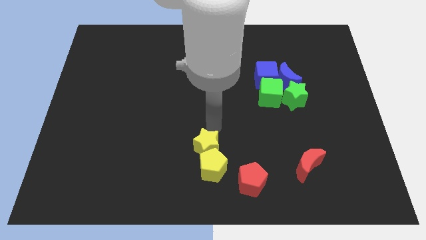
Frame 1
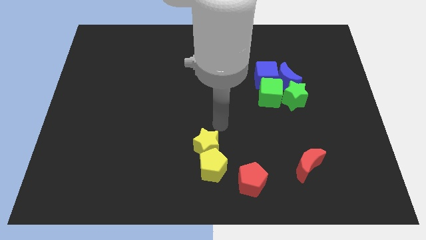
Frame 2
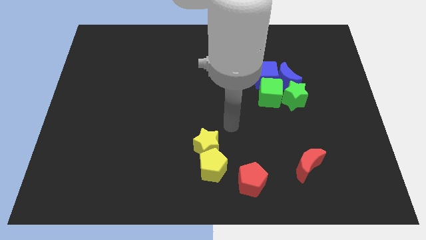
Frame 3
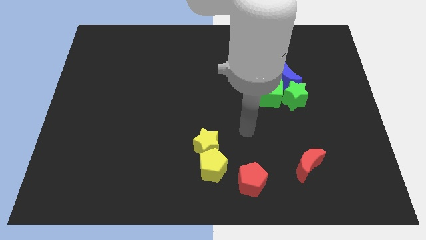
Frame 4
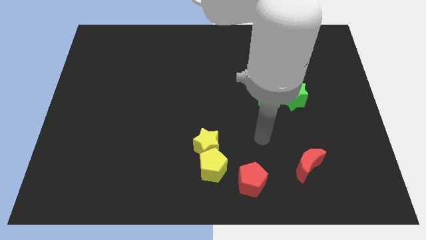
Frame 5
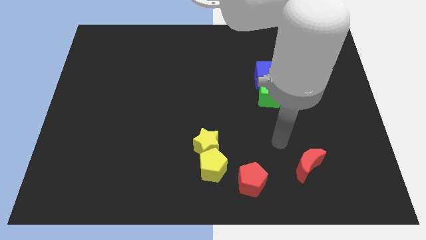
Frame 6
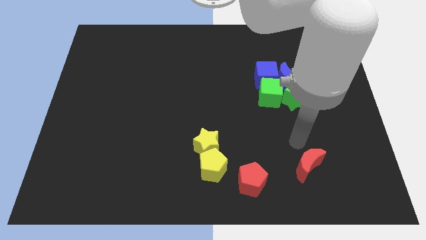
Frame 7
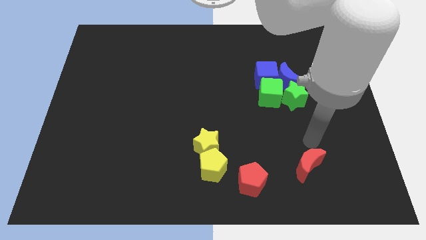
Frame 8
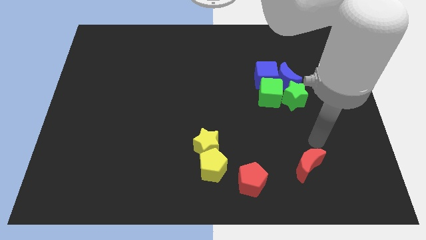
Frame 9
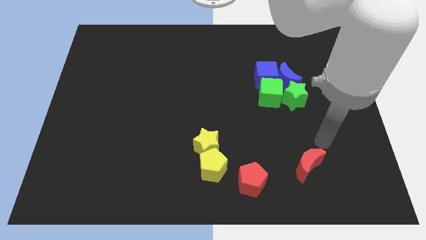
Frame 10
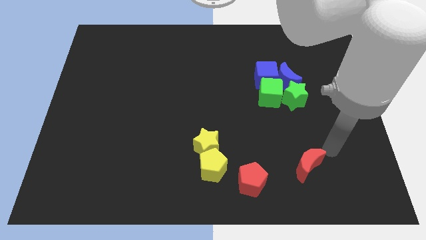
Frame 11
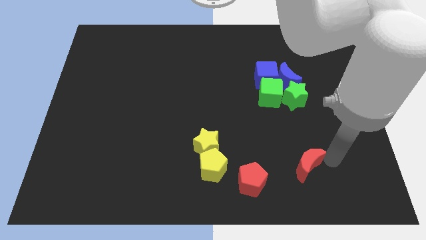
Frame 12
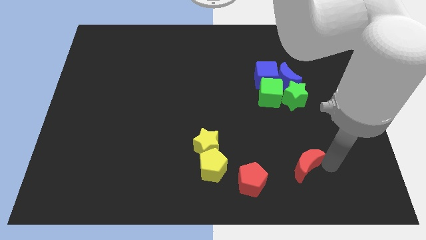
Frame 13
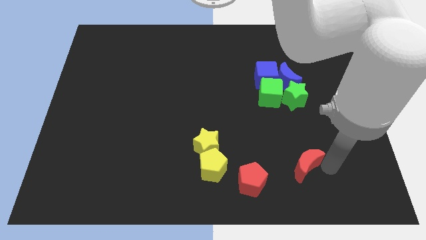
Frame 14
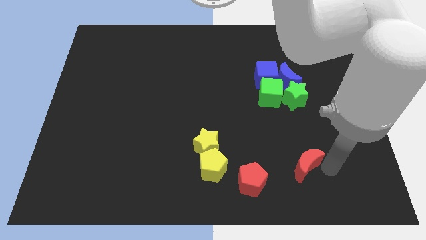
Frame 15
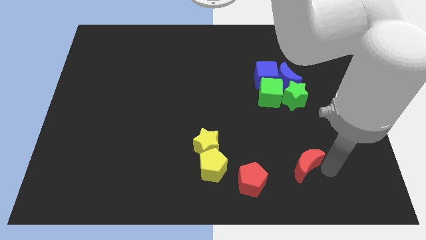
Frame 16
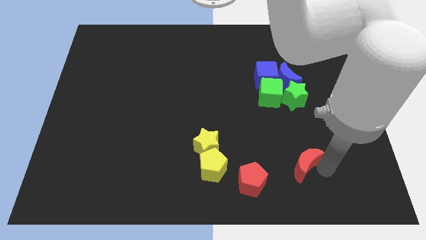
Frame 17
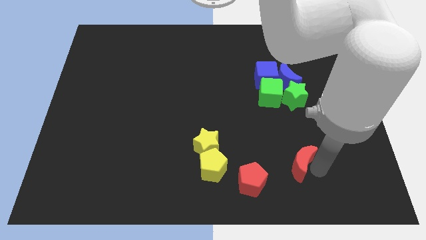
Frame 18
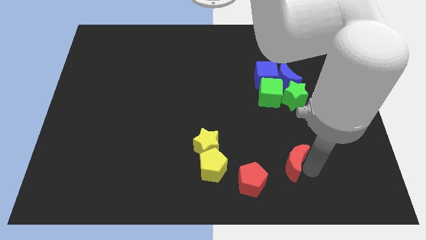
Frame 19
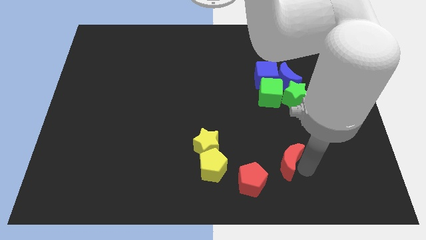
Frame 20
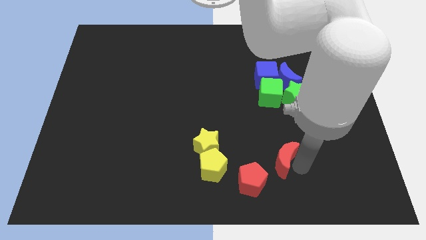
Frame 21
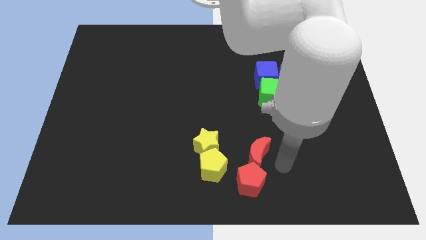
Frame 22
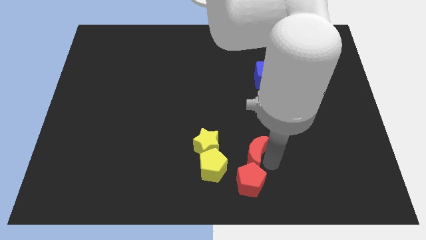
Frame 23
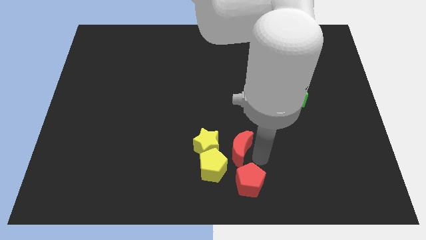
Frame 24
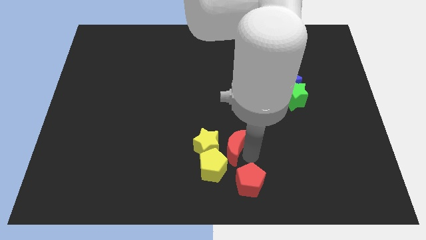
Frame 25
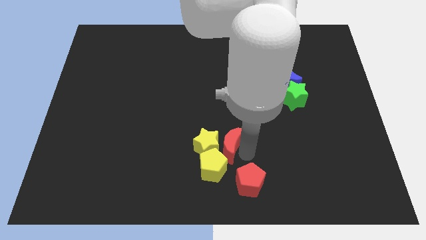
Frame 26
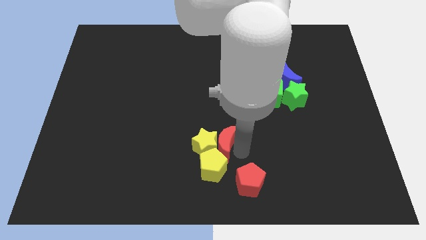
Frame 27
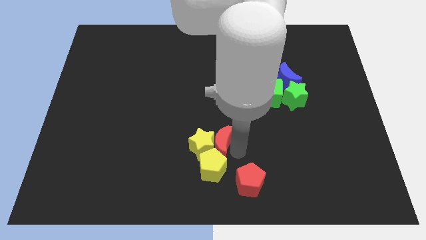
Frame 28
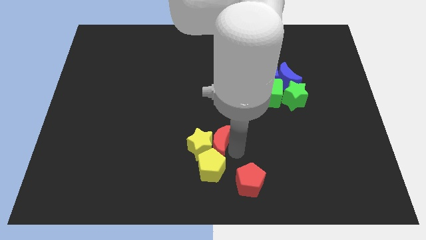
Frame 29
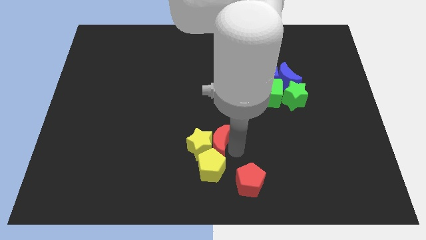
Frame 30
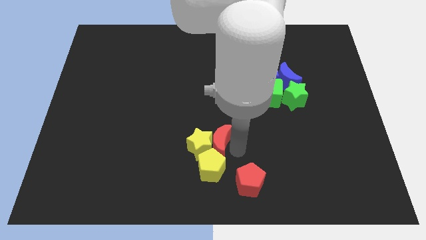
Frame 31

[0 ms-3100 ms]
slide red moon into yellow star

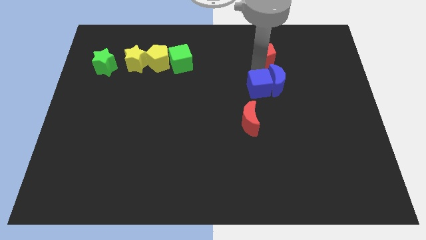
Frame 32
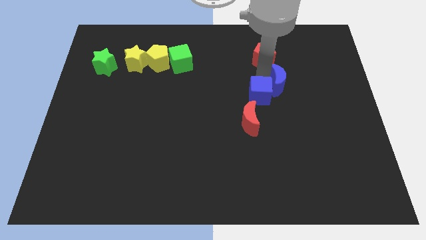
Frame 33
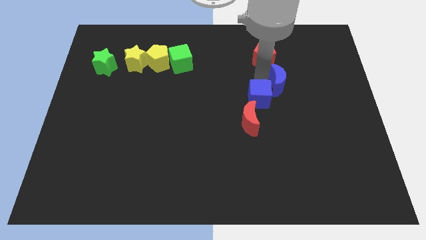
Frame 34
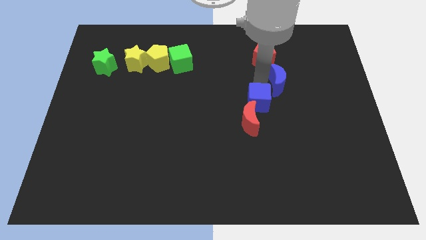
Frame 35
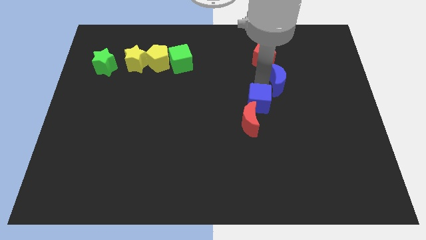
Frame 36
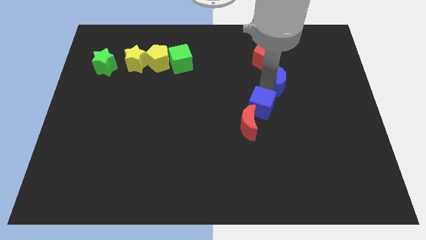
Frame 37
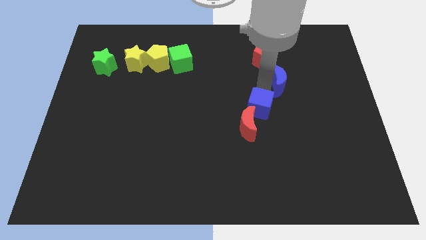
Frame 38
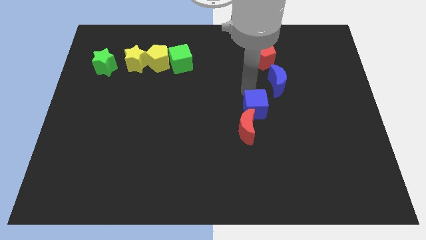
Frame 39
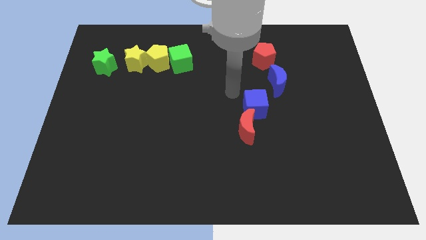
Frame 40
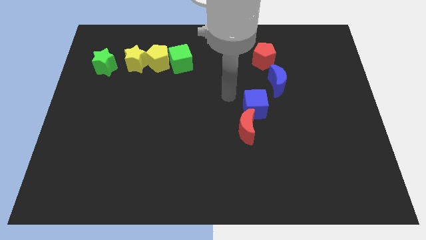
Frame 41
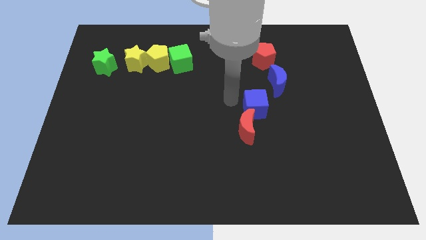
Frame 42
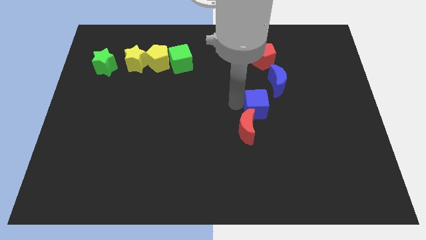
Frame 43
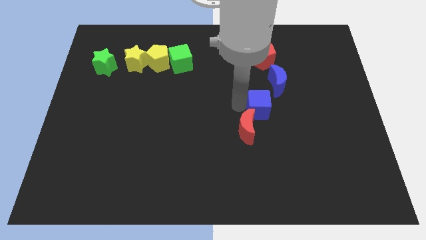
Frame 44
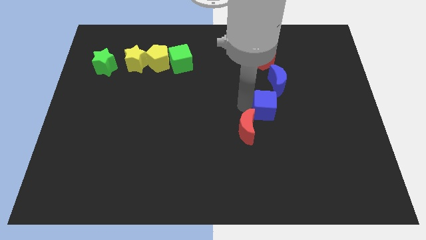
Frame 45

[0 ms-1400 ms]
push blue moon into red pentagon

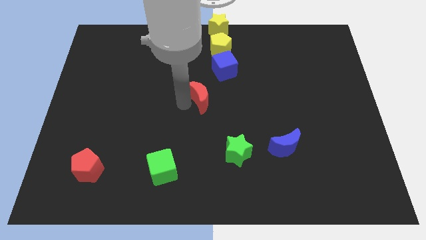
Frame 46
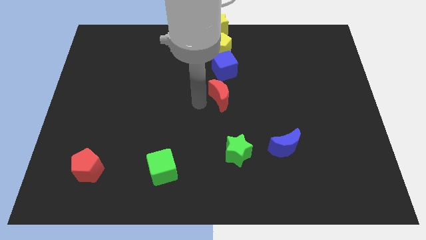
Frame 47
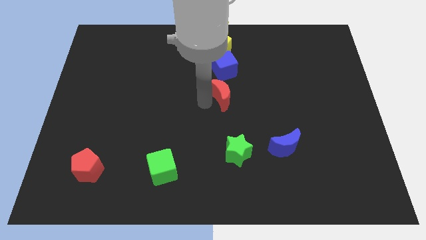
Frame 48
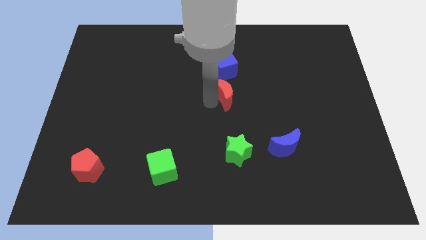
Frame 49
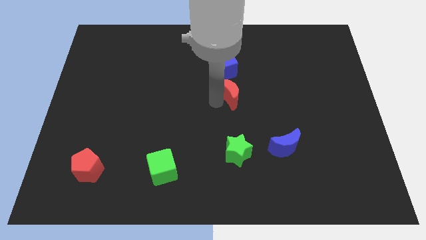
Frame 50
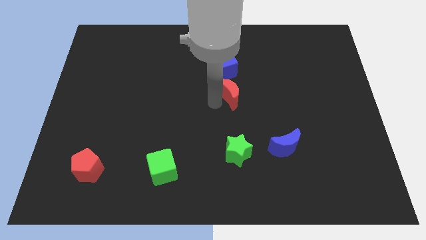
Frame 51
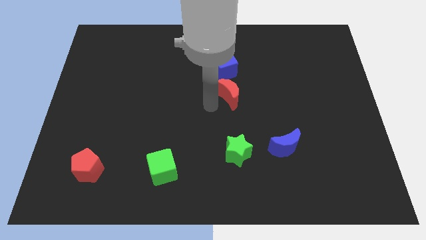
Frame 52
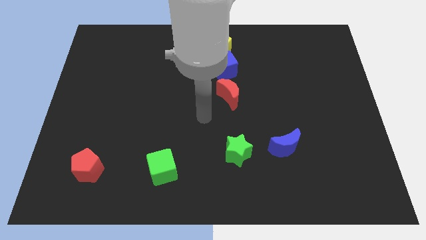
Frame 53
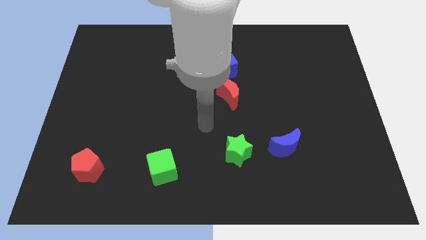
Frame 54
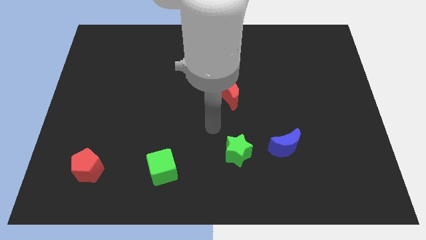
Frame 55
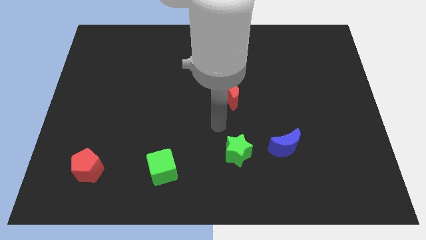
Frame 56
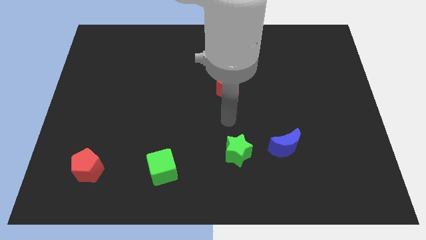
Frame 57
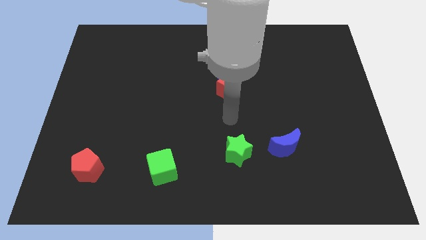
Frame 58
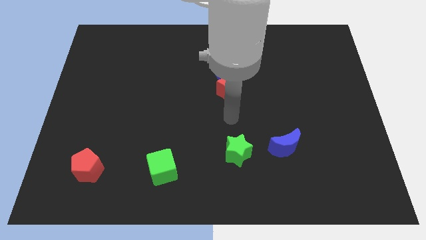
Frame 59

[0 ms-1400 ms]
push the red crescent vertically below the blue cube

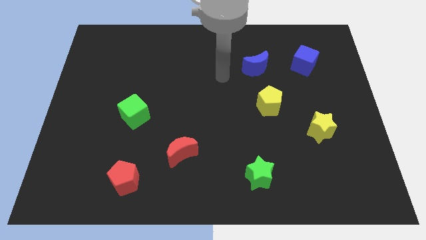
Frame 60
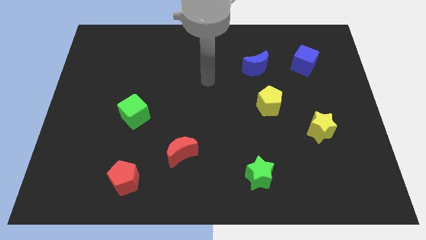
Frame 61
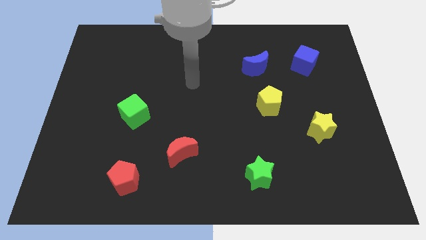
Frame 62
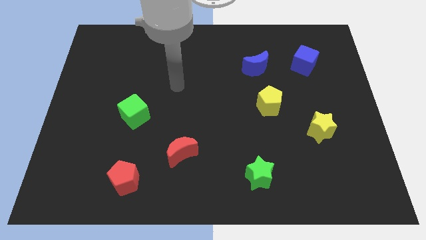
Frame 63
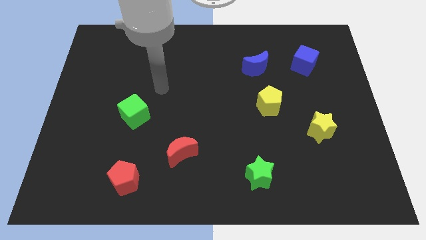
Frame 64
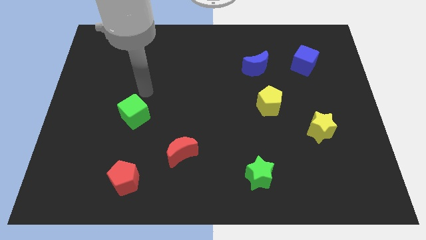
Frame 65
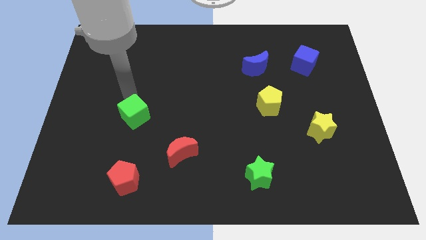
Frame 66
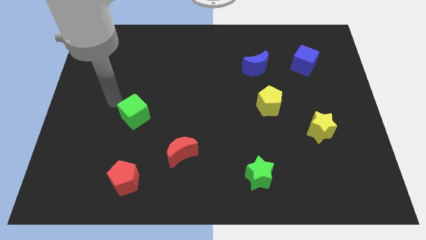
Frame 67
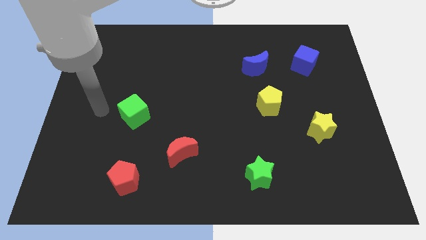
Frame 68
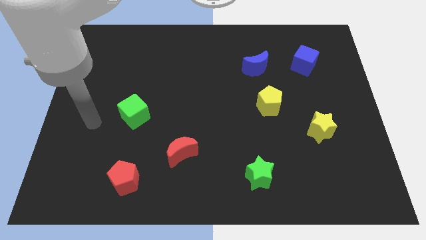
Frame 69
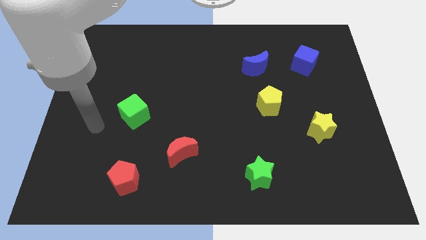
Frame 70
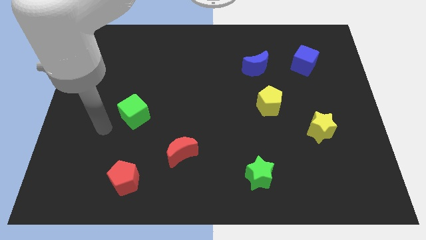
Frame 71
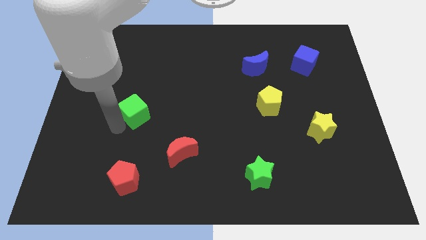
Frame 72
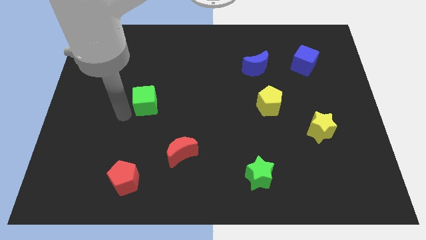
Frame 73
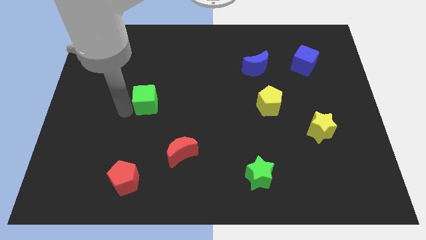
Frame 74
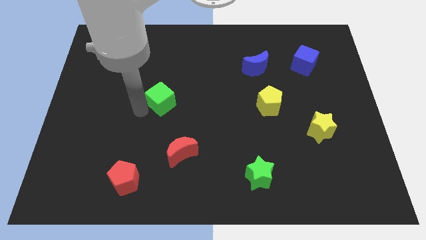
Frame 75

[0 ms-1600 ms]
push the green cube towards the center of the board

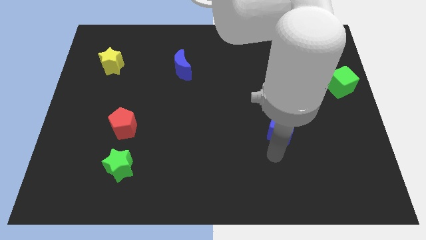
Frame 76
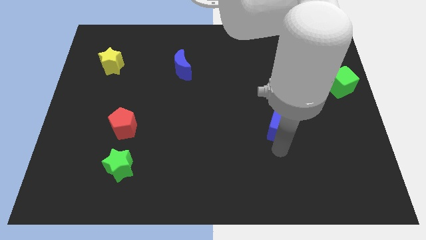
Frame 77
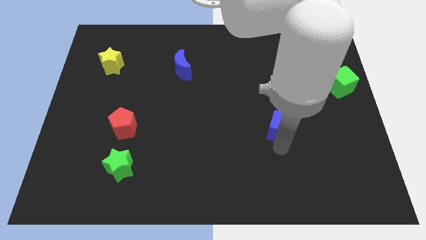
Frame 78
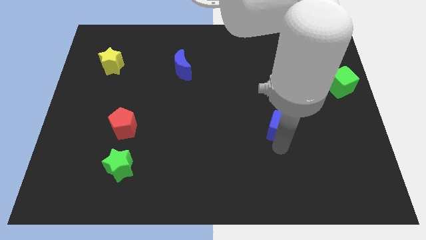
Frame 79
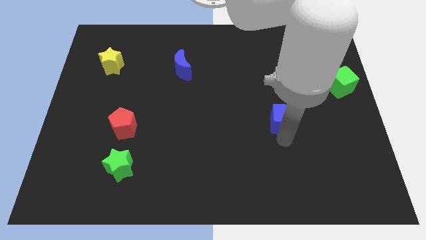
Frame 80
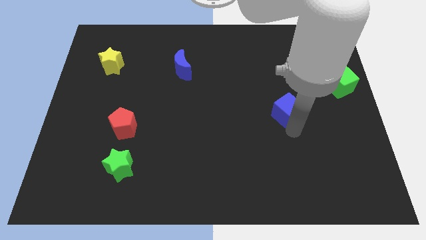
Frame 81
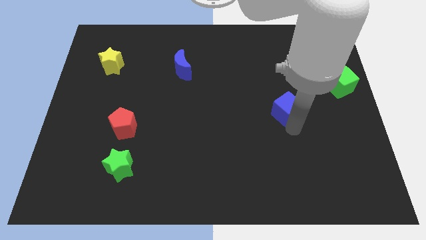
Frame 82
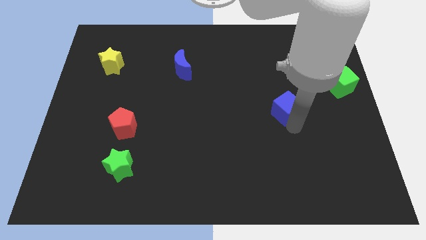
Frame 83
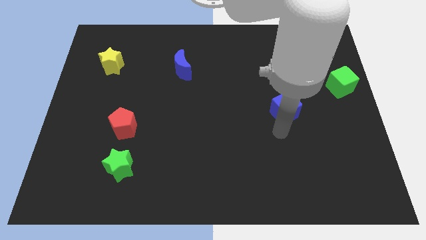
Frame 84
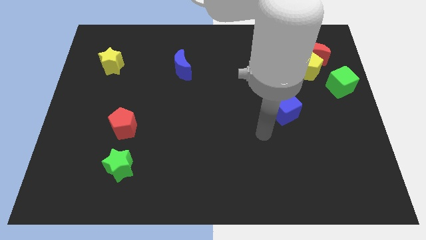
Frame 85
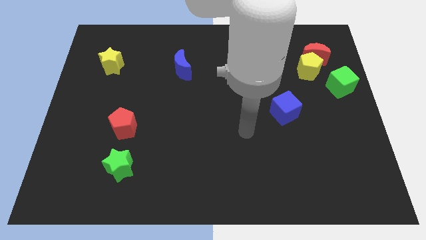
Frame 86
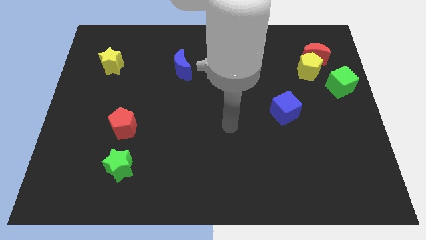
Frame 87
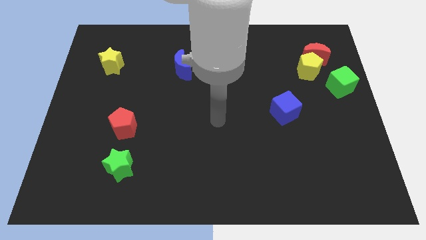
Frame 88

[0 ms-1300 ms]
push the blue cube upwards slightly

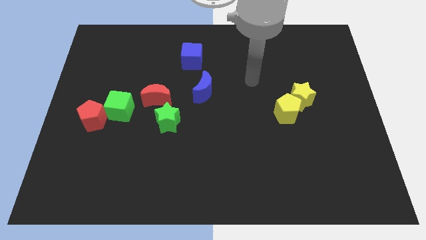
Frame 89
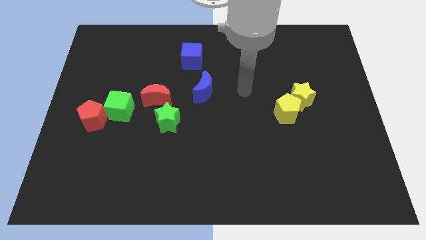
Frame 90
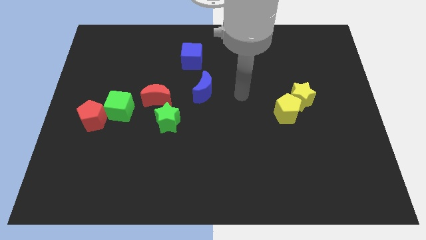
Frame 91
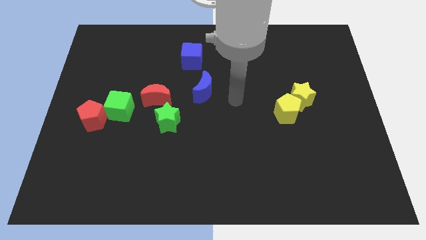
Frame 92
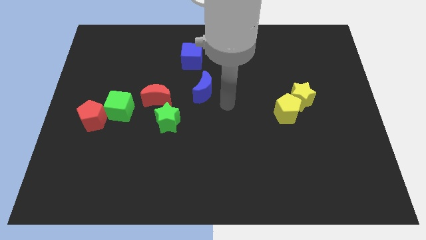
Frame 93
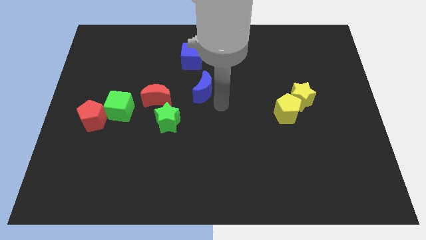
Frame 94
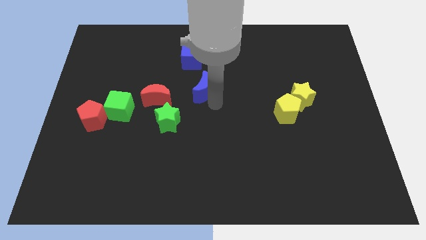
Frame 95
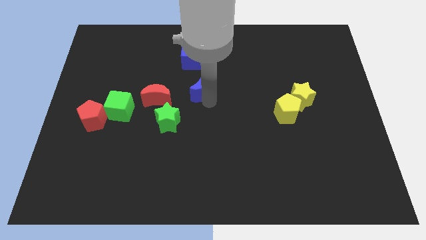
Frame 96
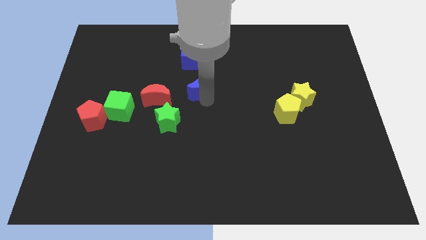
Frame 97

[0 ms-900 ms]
point your arm right to blue moon
